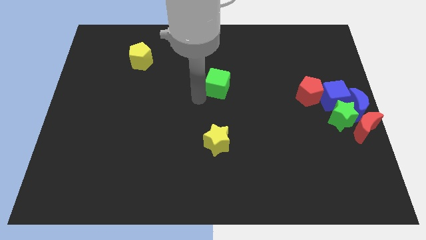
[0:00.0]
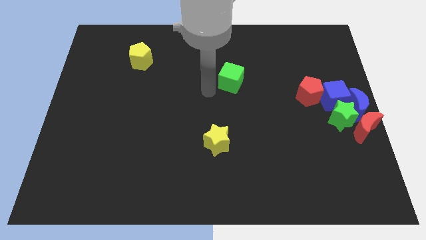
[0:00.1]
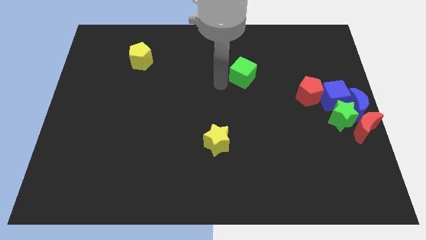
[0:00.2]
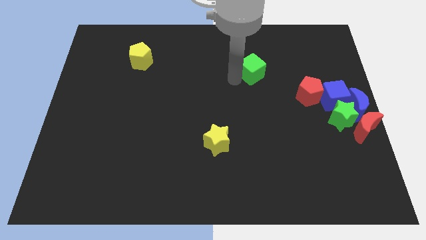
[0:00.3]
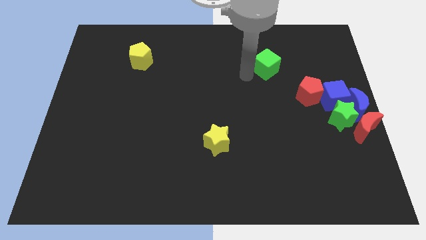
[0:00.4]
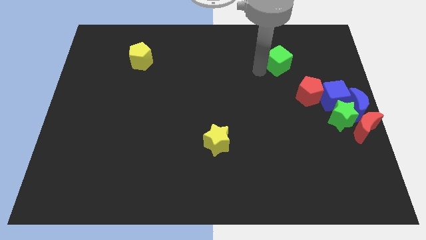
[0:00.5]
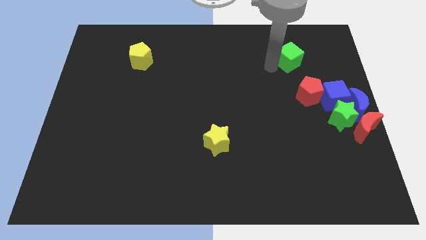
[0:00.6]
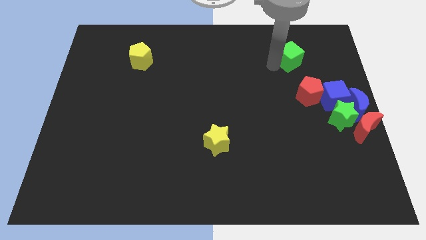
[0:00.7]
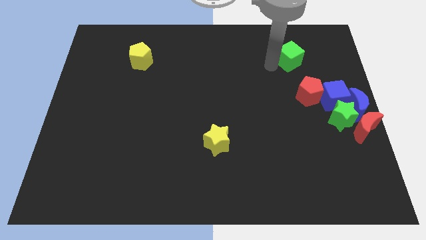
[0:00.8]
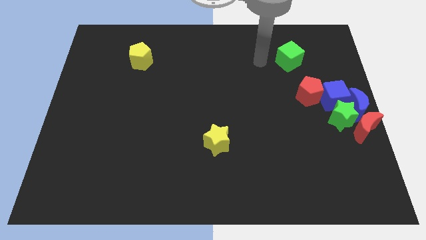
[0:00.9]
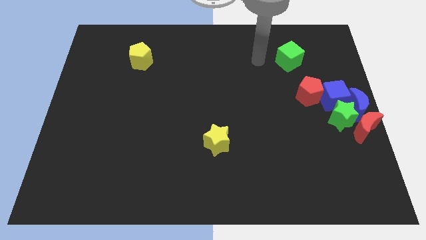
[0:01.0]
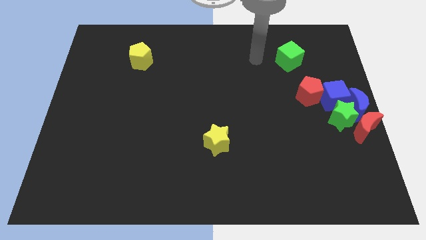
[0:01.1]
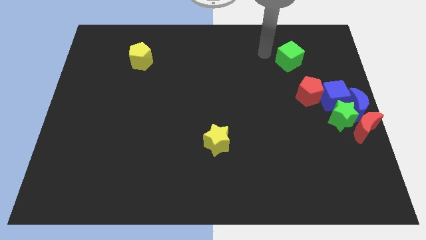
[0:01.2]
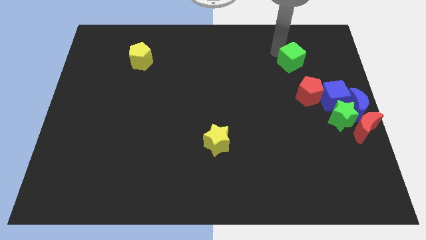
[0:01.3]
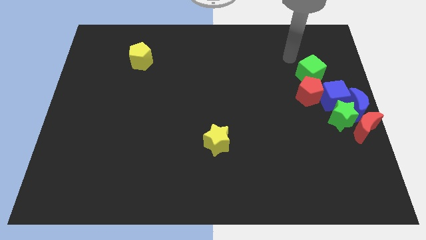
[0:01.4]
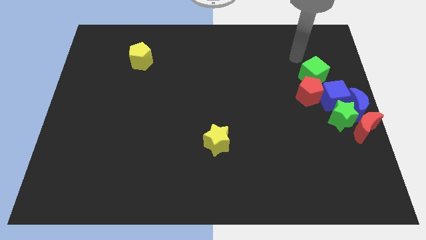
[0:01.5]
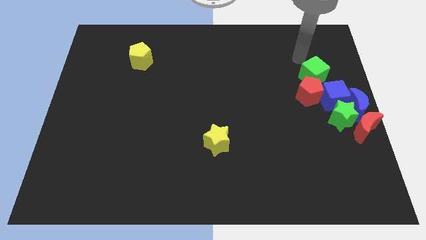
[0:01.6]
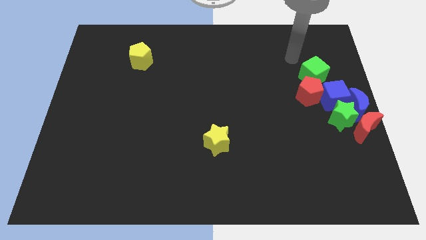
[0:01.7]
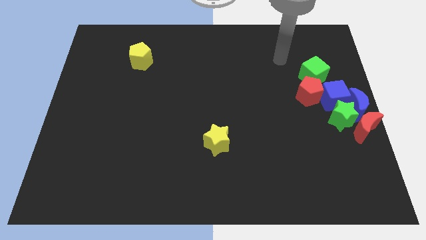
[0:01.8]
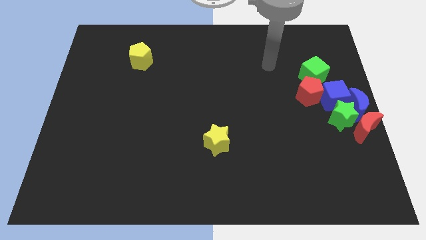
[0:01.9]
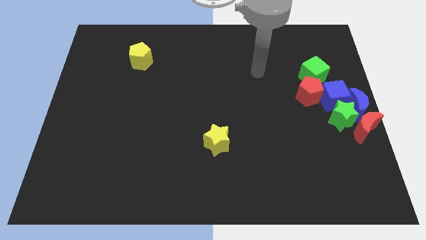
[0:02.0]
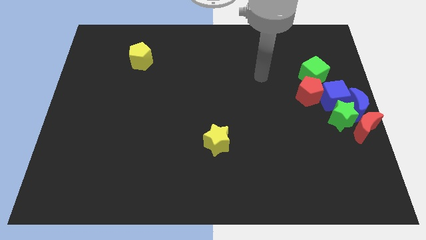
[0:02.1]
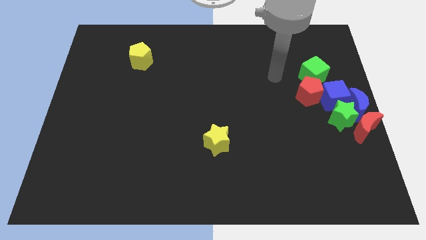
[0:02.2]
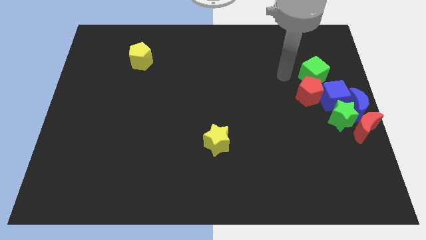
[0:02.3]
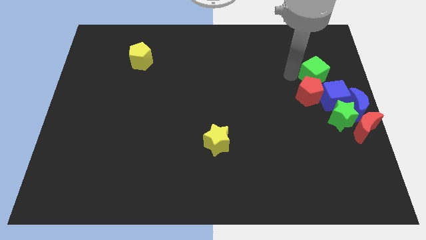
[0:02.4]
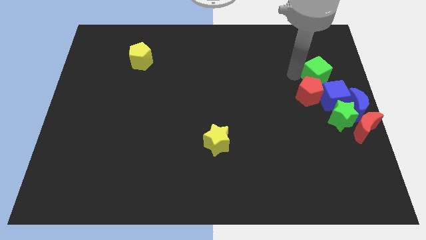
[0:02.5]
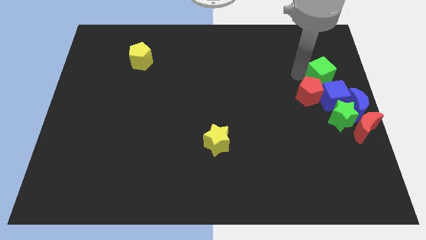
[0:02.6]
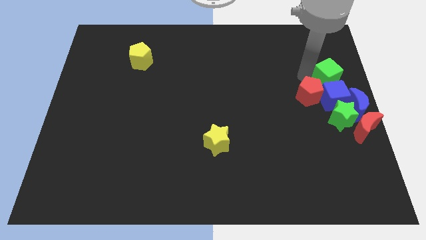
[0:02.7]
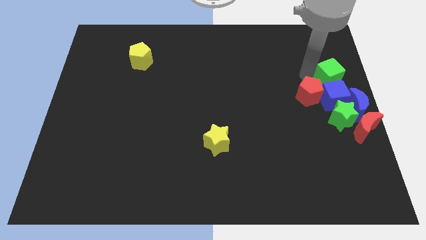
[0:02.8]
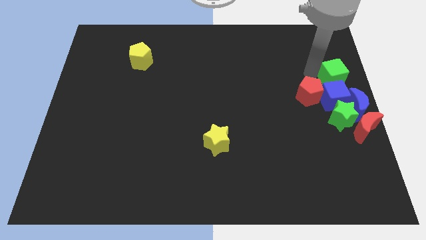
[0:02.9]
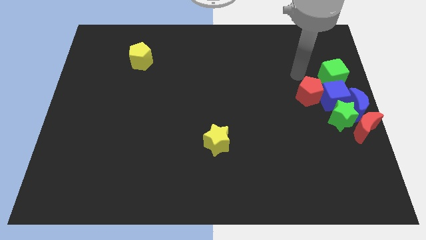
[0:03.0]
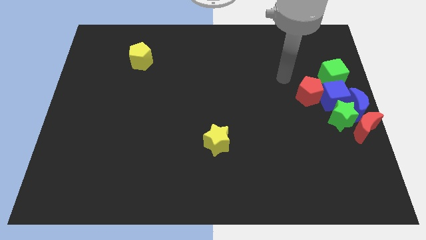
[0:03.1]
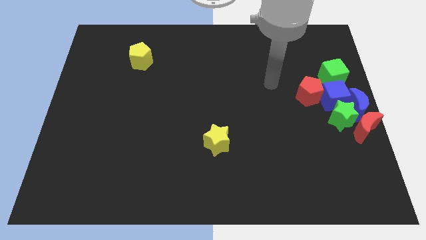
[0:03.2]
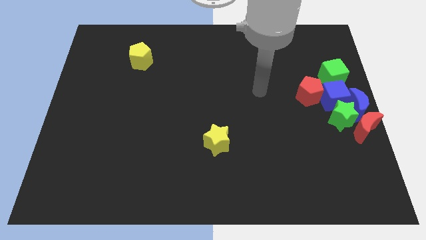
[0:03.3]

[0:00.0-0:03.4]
push green cube to the top of the blue cube

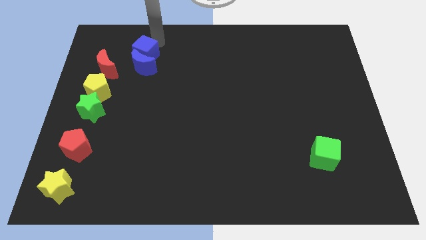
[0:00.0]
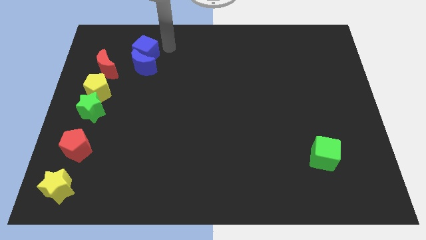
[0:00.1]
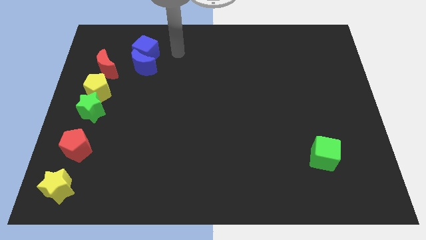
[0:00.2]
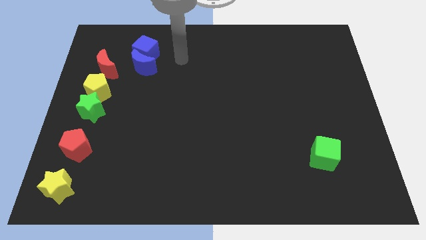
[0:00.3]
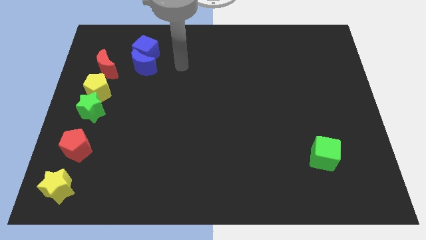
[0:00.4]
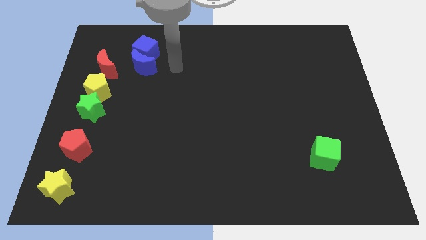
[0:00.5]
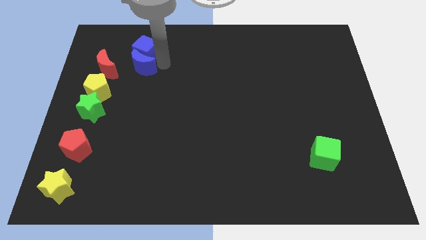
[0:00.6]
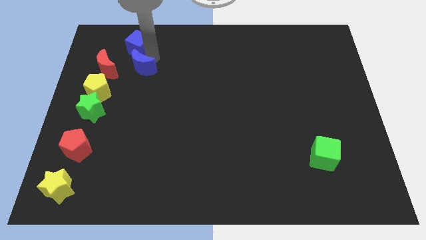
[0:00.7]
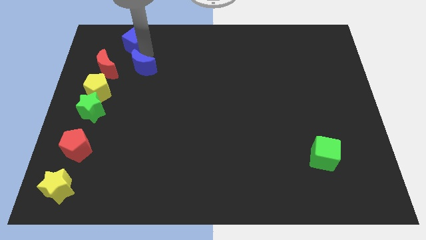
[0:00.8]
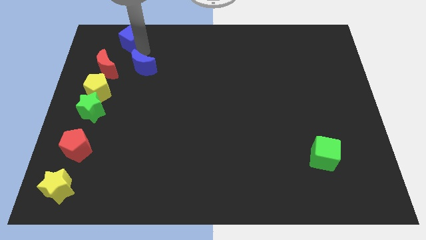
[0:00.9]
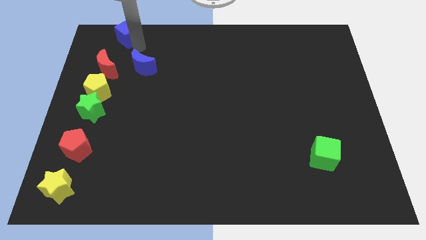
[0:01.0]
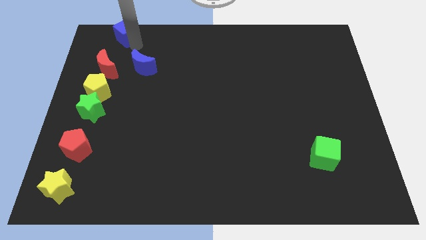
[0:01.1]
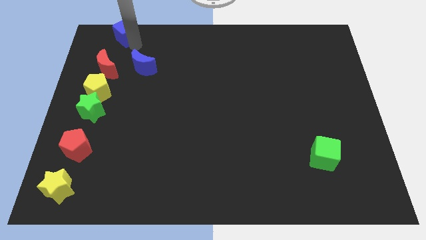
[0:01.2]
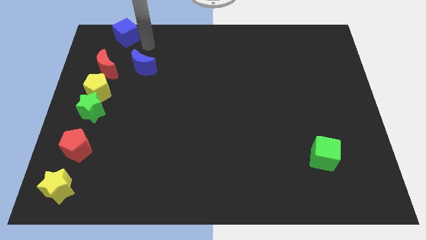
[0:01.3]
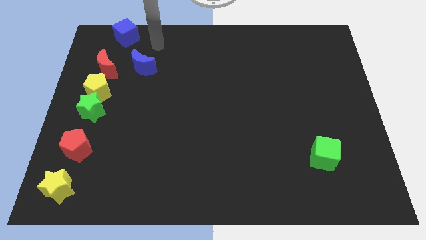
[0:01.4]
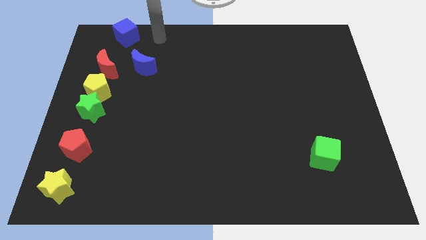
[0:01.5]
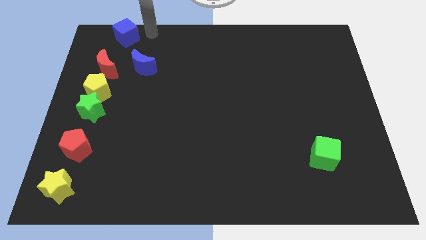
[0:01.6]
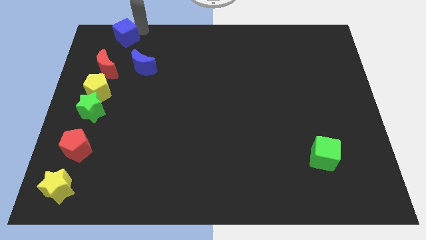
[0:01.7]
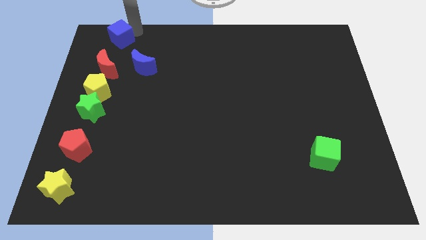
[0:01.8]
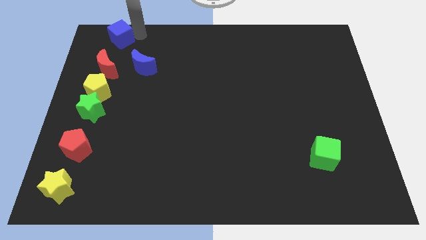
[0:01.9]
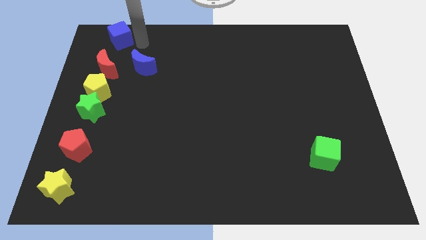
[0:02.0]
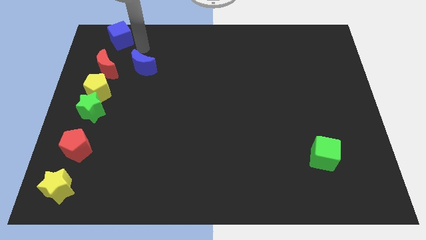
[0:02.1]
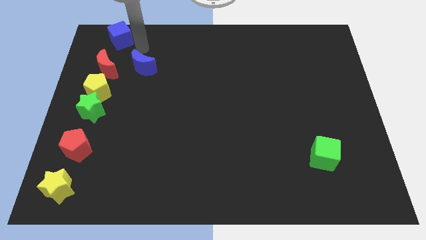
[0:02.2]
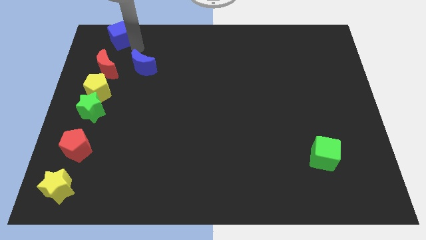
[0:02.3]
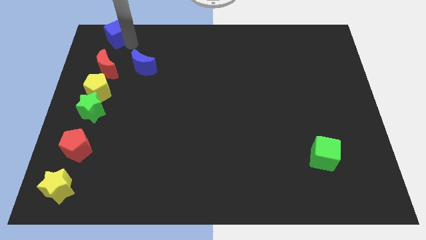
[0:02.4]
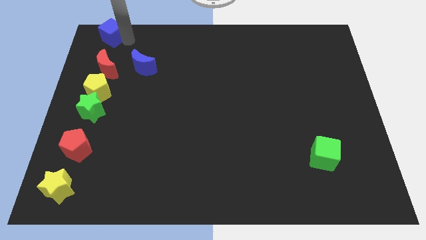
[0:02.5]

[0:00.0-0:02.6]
push the blue cube to the top of the red crescent

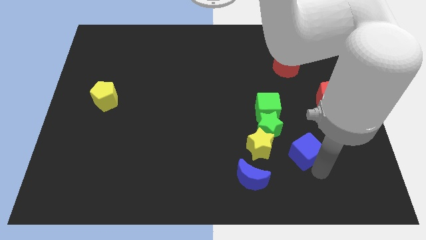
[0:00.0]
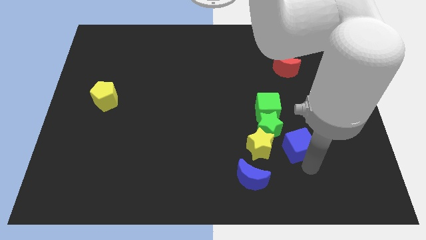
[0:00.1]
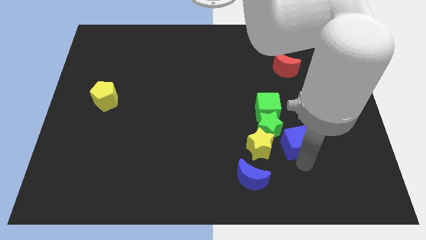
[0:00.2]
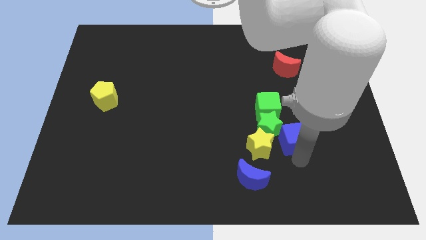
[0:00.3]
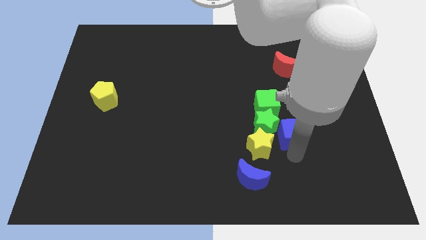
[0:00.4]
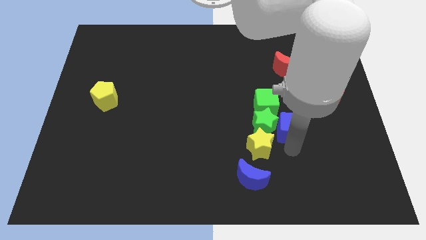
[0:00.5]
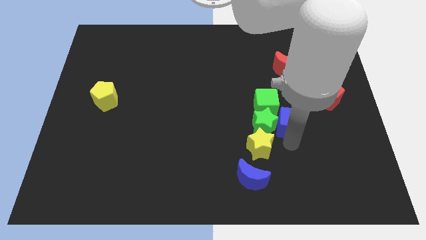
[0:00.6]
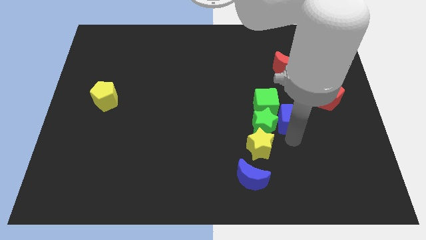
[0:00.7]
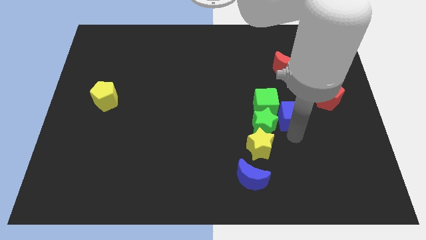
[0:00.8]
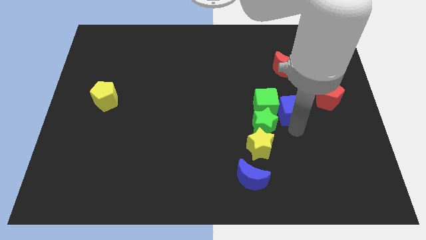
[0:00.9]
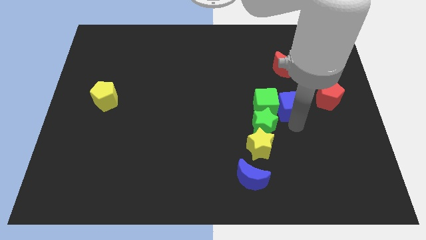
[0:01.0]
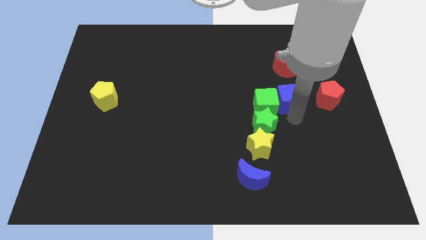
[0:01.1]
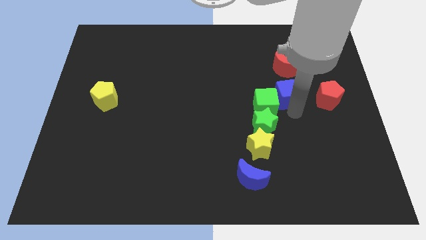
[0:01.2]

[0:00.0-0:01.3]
push blue cube in to green cube

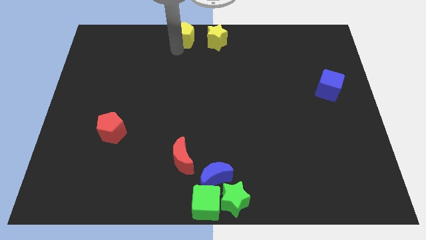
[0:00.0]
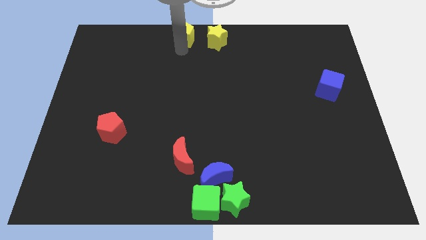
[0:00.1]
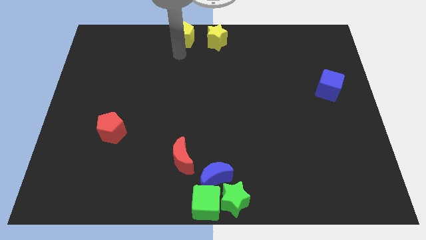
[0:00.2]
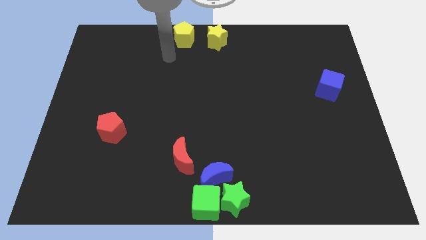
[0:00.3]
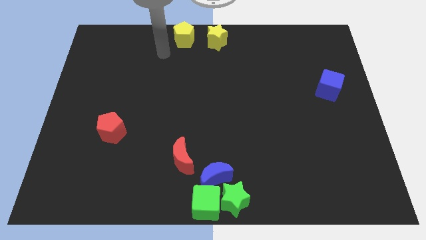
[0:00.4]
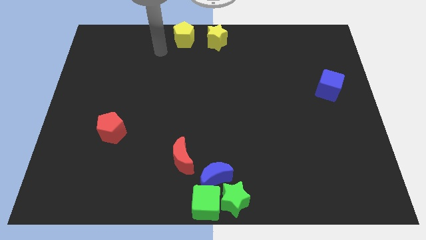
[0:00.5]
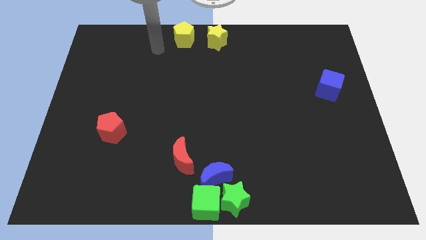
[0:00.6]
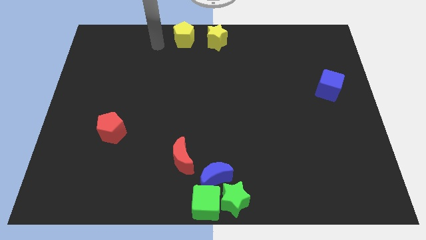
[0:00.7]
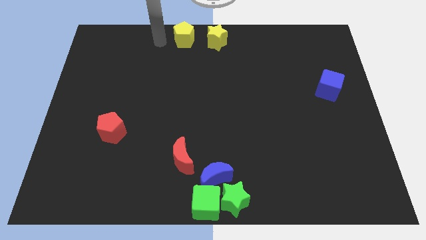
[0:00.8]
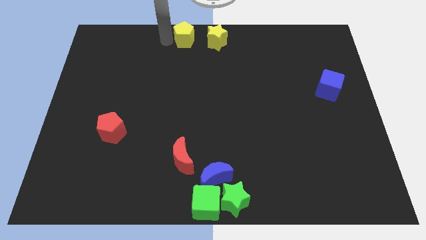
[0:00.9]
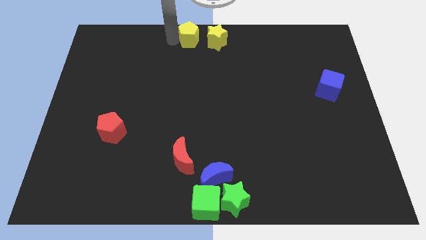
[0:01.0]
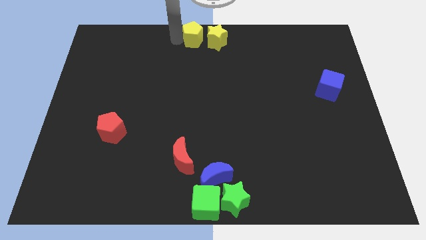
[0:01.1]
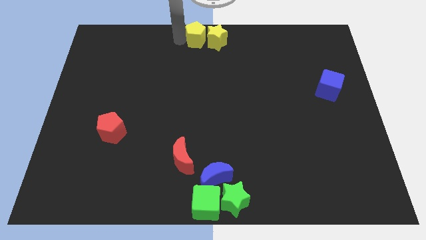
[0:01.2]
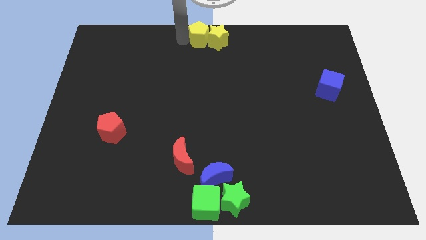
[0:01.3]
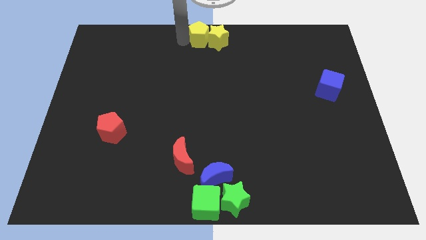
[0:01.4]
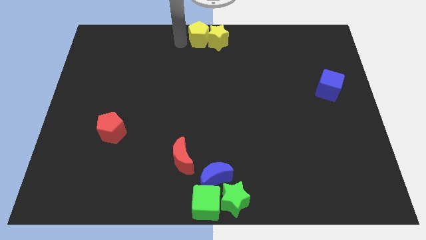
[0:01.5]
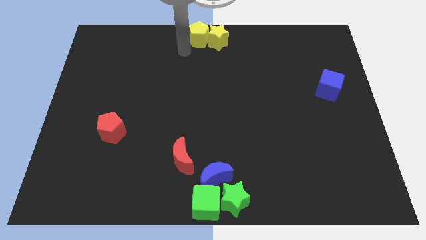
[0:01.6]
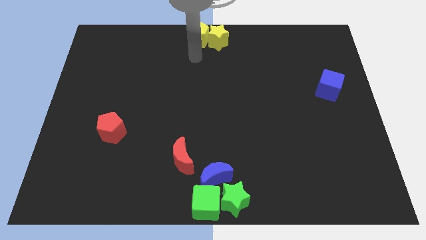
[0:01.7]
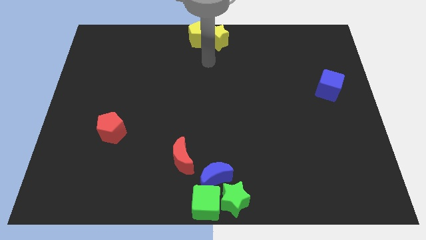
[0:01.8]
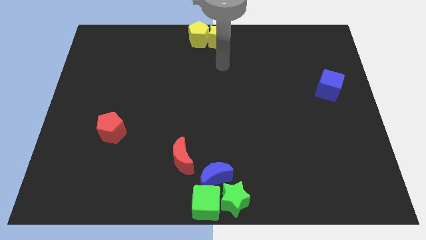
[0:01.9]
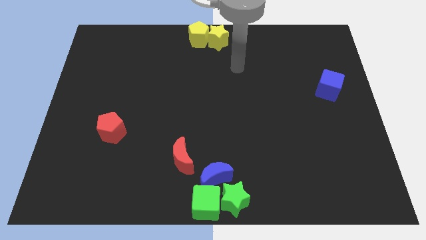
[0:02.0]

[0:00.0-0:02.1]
slide yellow pentagon into yellow star
